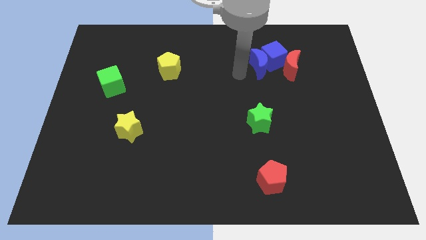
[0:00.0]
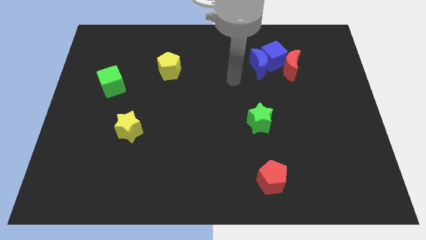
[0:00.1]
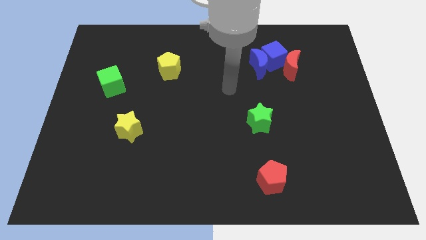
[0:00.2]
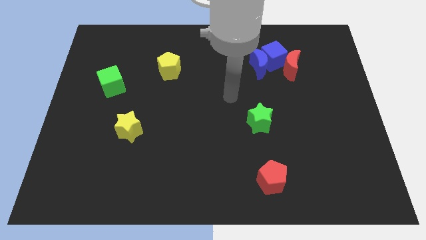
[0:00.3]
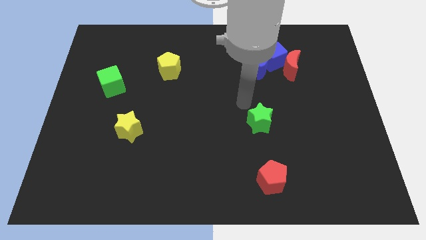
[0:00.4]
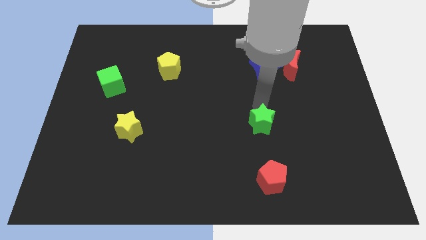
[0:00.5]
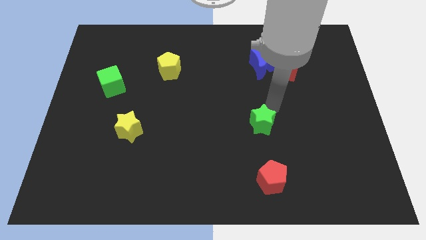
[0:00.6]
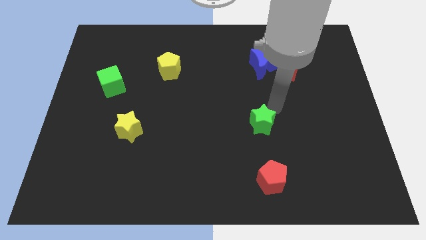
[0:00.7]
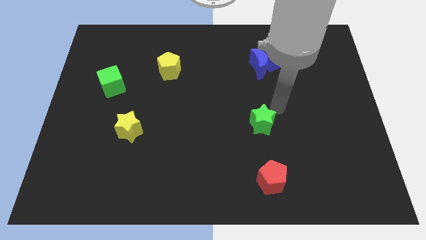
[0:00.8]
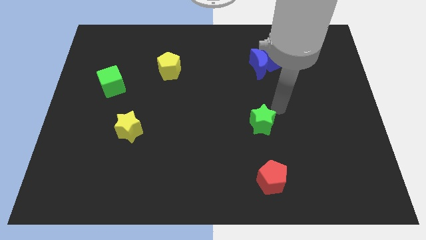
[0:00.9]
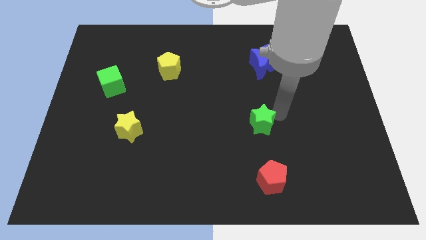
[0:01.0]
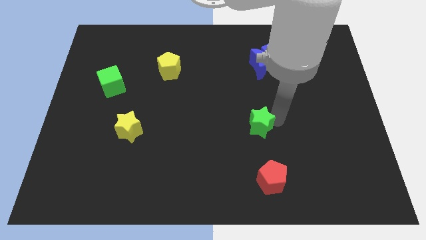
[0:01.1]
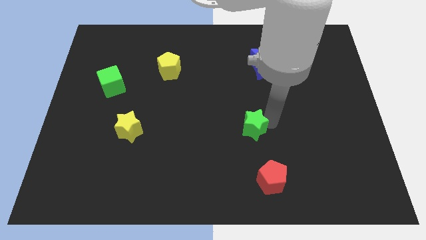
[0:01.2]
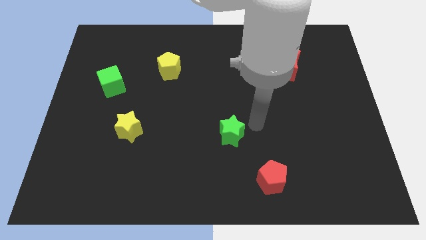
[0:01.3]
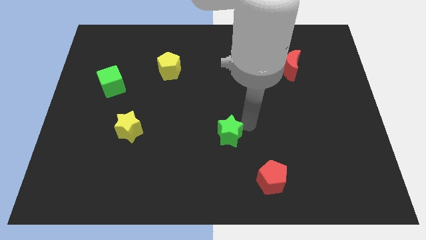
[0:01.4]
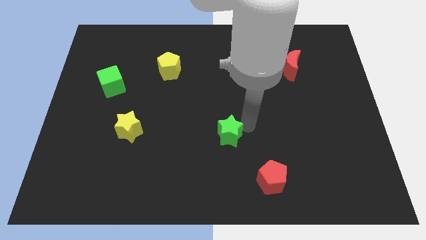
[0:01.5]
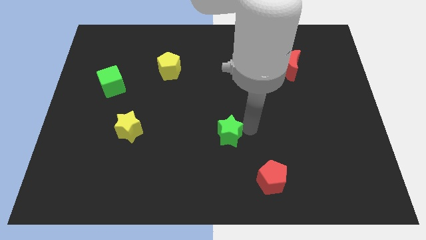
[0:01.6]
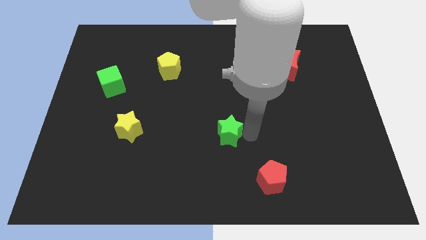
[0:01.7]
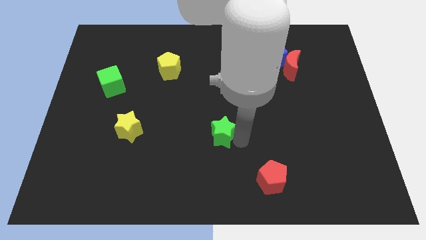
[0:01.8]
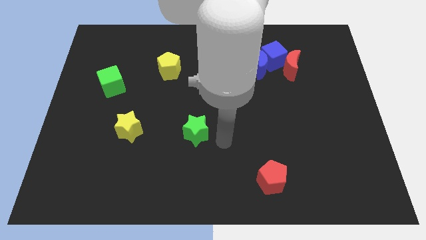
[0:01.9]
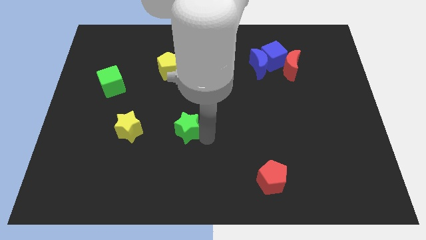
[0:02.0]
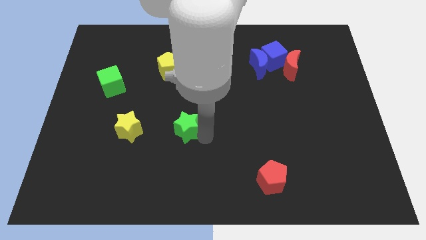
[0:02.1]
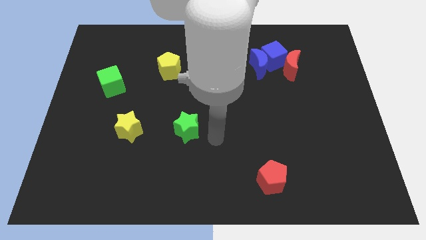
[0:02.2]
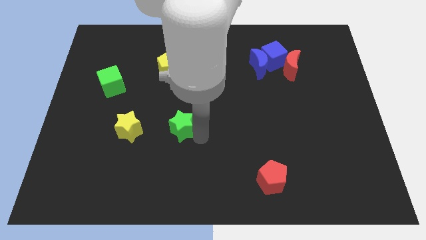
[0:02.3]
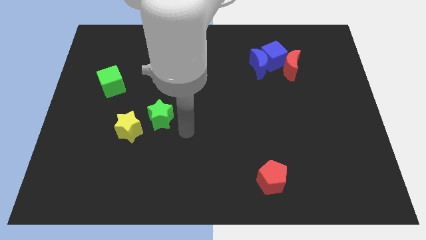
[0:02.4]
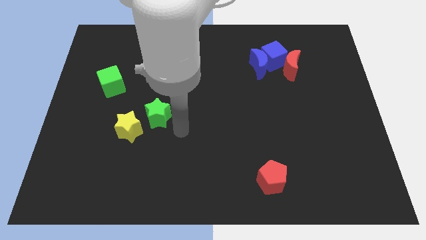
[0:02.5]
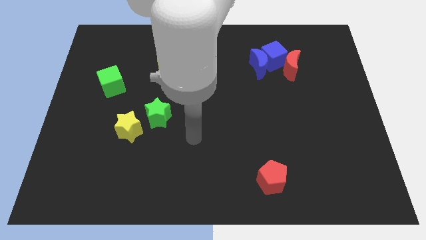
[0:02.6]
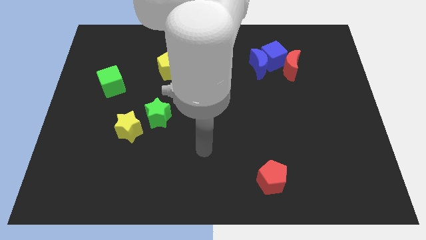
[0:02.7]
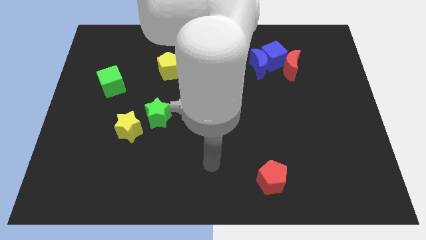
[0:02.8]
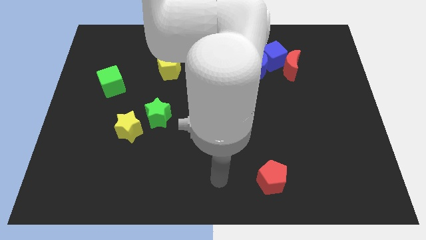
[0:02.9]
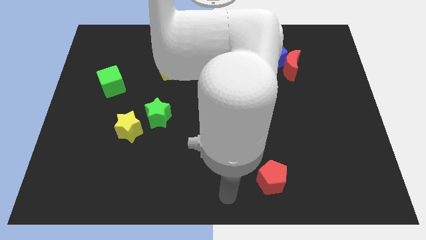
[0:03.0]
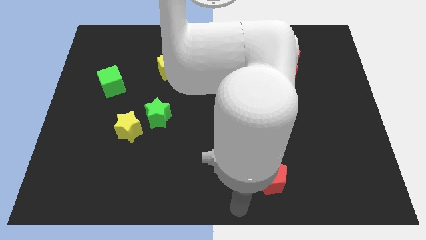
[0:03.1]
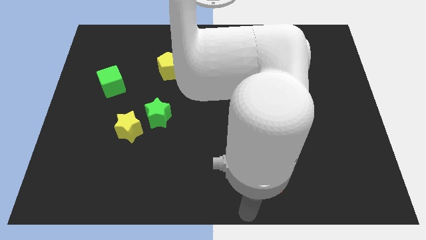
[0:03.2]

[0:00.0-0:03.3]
move the green star to the right of the yellow star

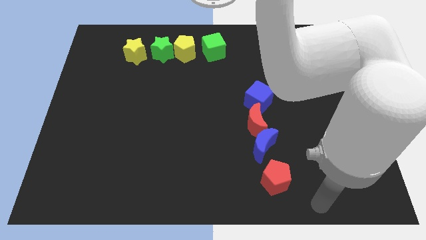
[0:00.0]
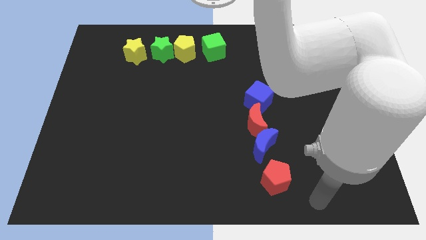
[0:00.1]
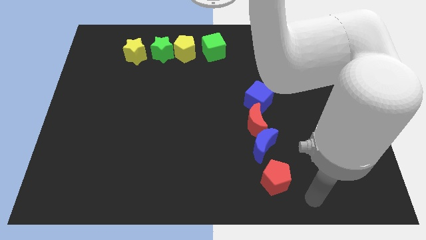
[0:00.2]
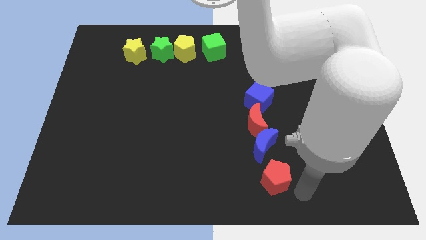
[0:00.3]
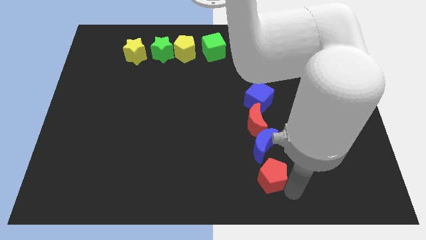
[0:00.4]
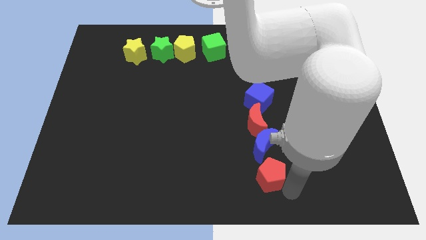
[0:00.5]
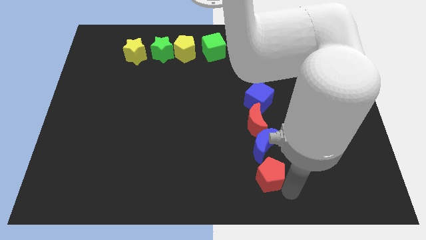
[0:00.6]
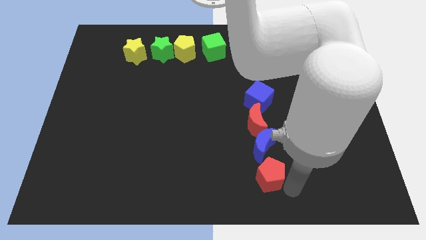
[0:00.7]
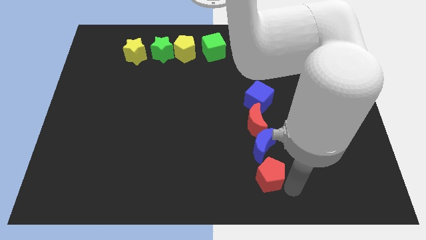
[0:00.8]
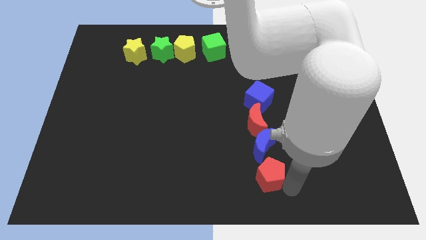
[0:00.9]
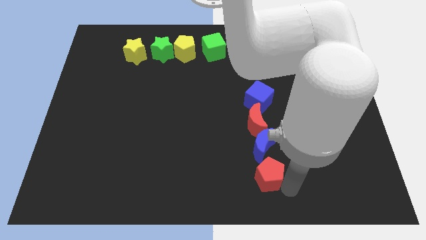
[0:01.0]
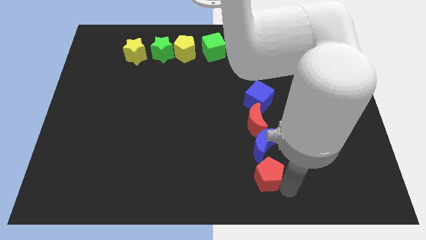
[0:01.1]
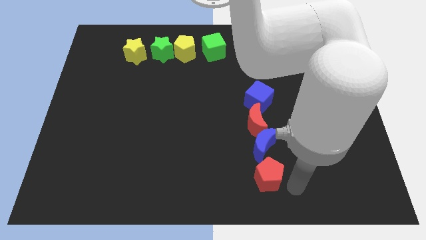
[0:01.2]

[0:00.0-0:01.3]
put the red pentagon at the bottom of the blue crescent

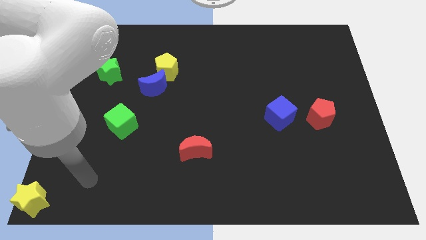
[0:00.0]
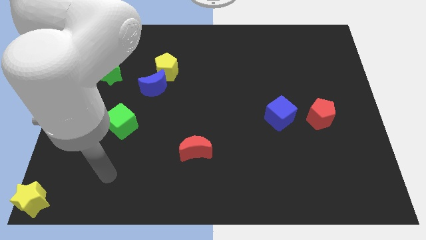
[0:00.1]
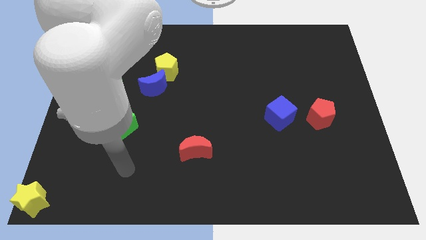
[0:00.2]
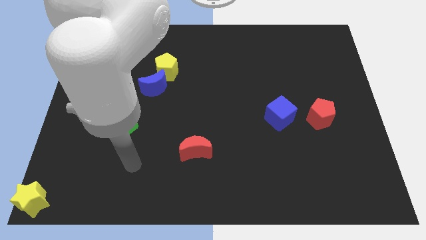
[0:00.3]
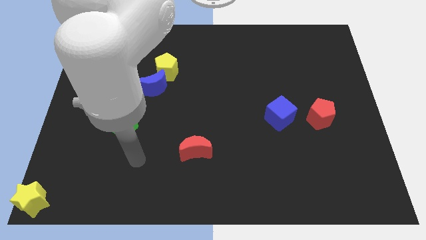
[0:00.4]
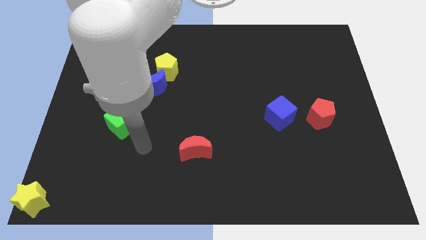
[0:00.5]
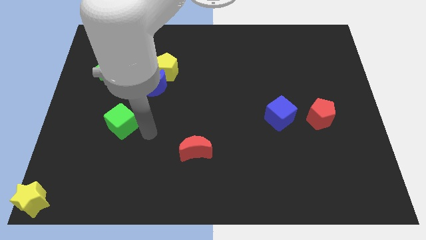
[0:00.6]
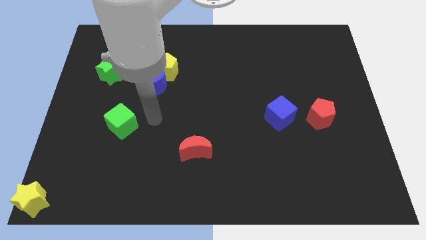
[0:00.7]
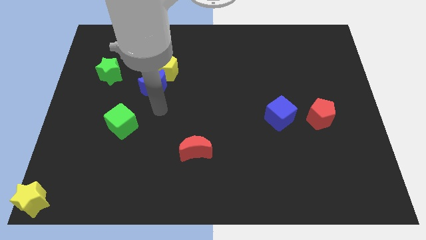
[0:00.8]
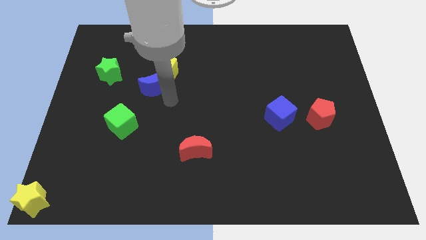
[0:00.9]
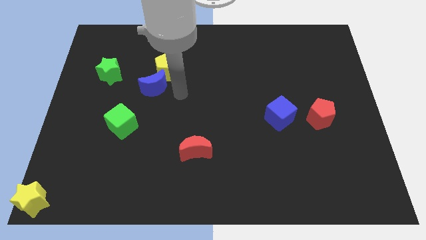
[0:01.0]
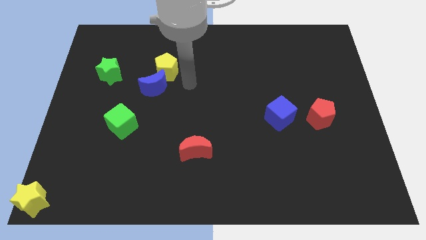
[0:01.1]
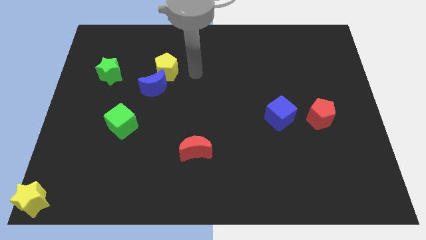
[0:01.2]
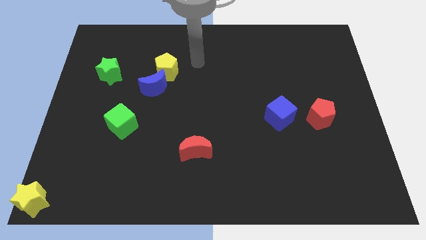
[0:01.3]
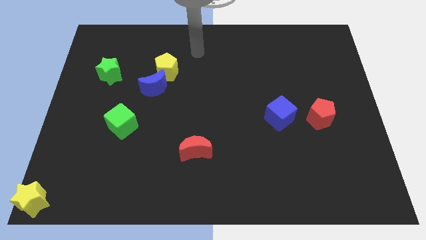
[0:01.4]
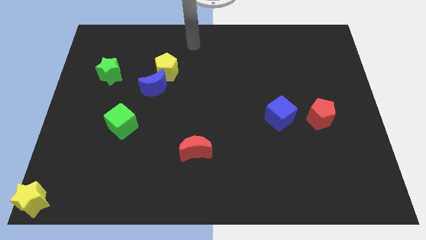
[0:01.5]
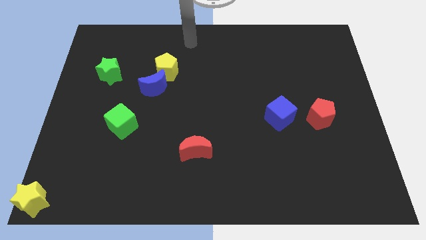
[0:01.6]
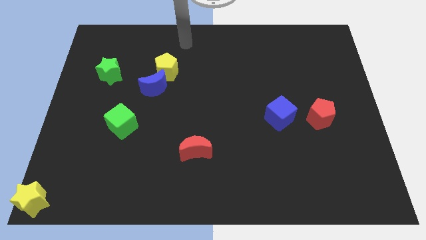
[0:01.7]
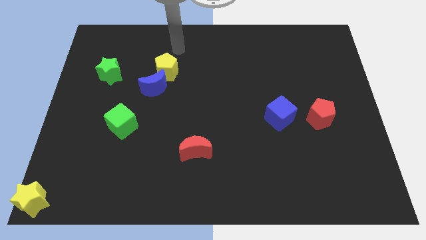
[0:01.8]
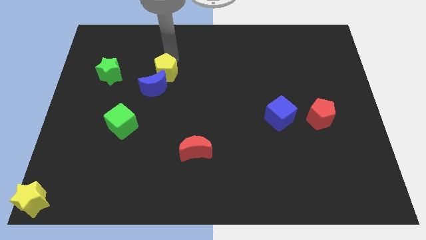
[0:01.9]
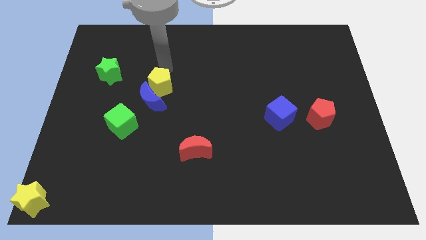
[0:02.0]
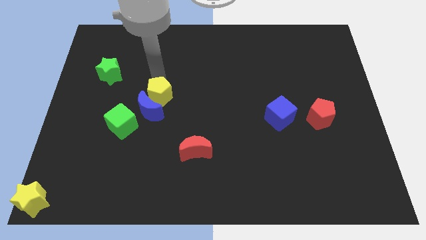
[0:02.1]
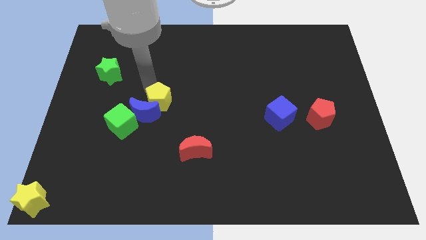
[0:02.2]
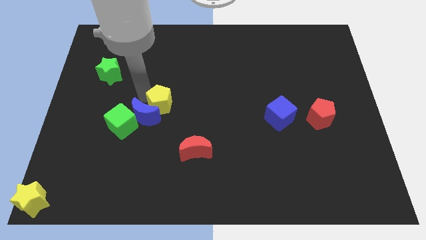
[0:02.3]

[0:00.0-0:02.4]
push the blue moon with the yellow pentagon into the green cube

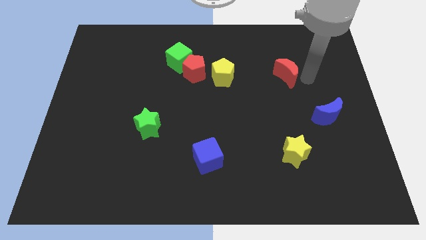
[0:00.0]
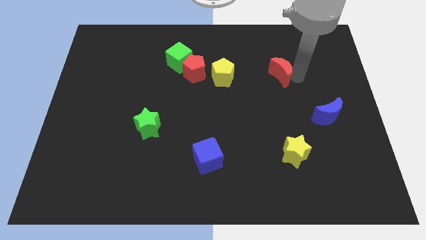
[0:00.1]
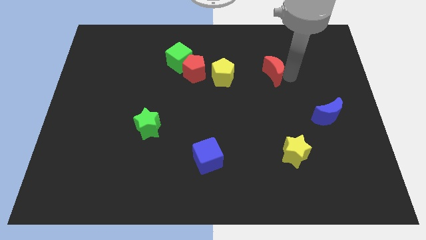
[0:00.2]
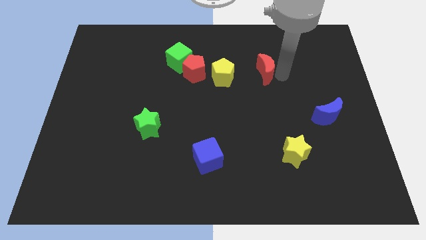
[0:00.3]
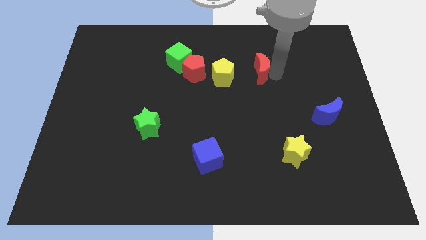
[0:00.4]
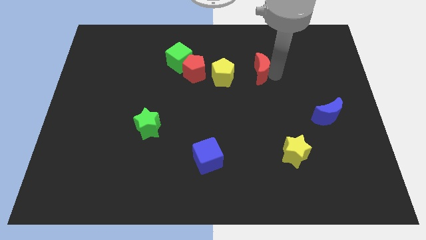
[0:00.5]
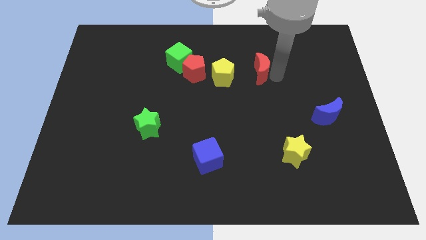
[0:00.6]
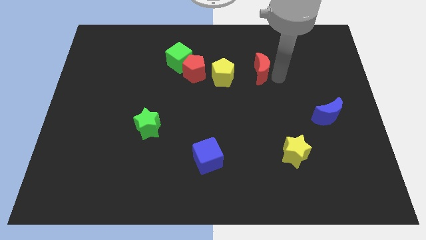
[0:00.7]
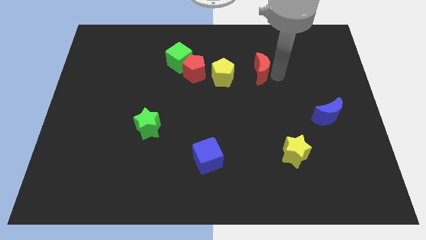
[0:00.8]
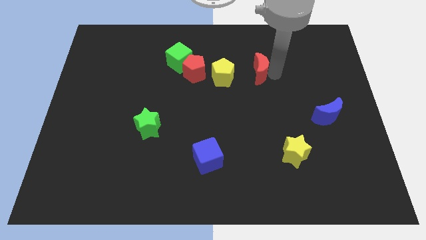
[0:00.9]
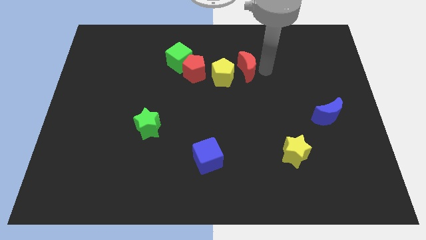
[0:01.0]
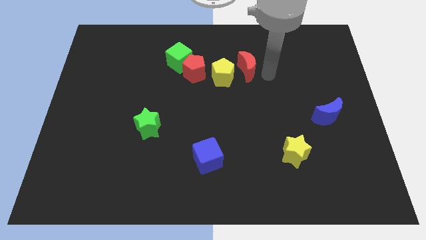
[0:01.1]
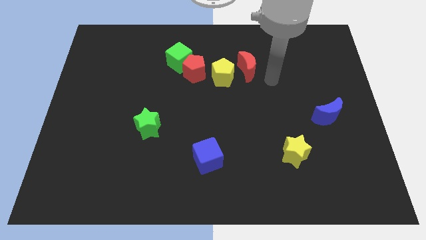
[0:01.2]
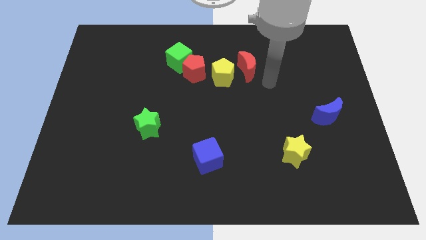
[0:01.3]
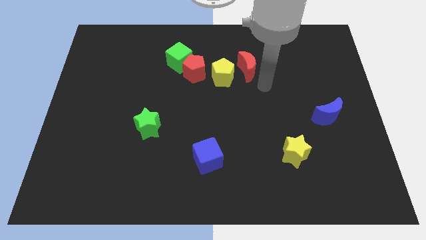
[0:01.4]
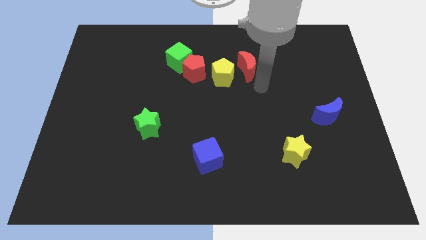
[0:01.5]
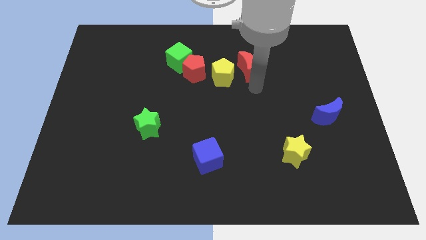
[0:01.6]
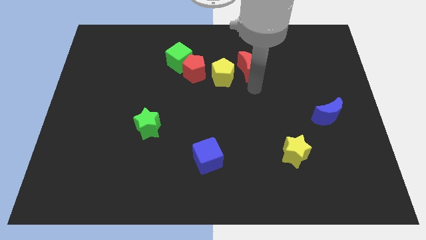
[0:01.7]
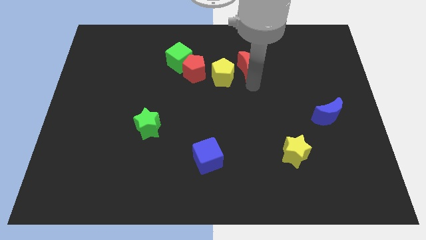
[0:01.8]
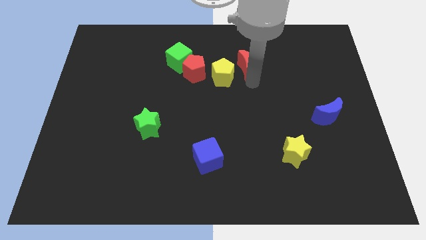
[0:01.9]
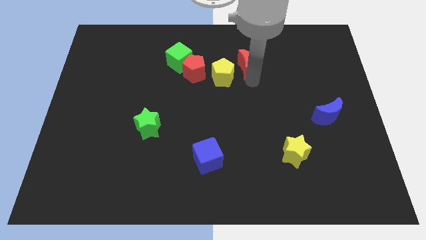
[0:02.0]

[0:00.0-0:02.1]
move the red crescent slightly towards the yellow pentagon
